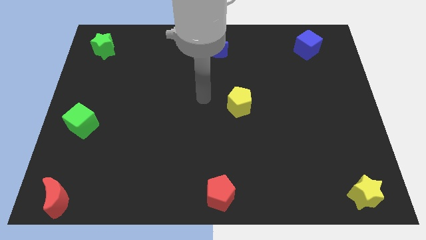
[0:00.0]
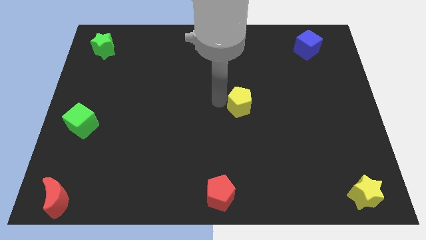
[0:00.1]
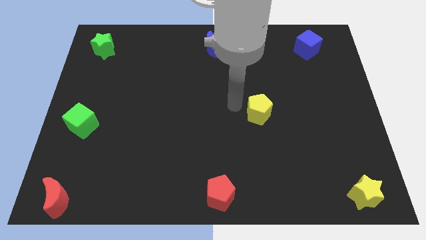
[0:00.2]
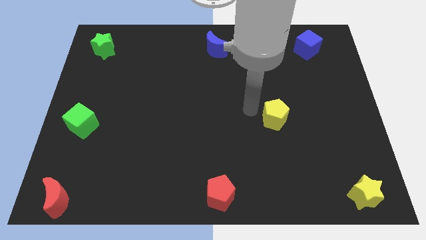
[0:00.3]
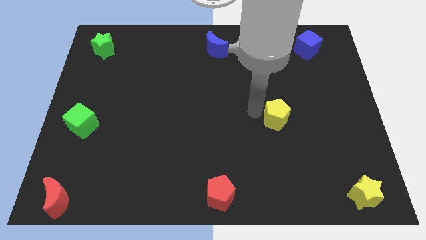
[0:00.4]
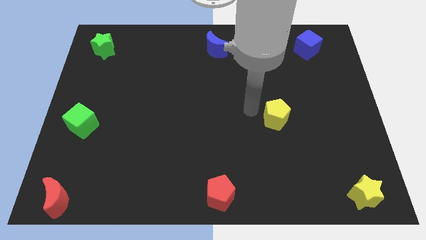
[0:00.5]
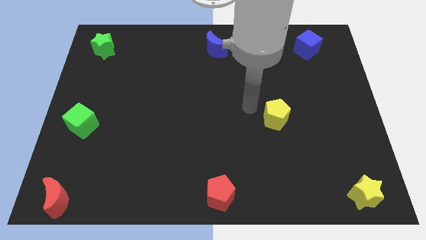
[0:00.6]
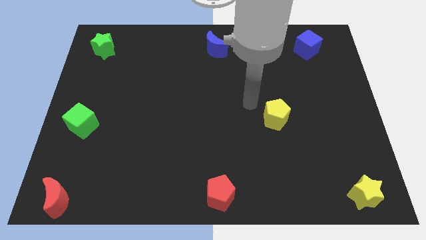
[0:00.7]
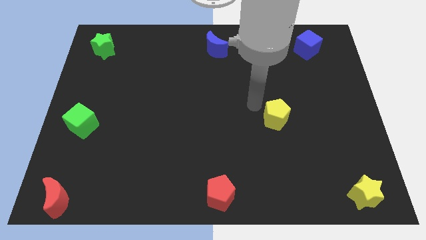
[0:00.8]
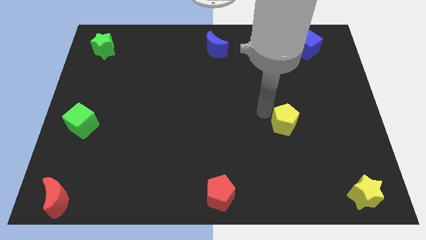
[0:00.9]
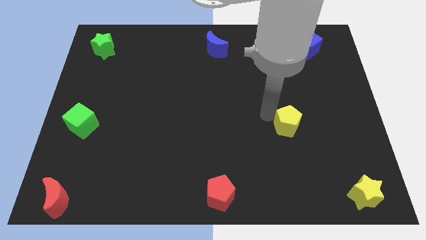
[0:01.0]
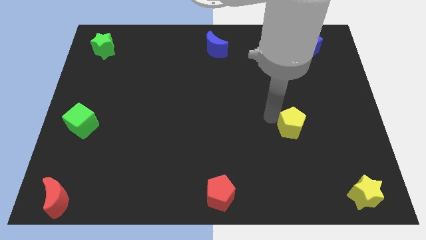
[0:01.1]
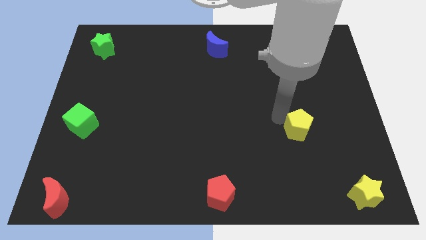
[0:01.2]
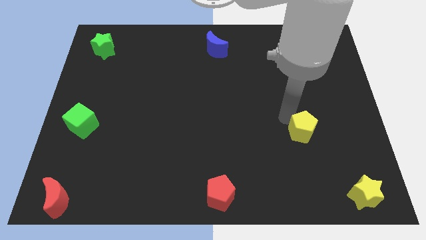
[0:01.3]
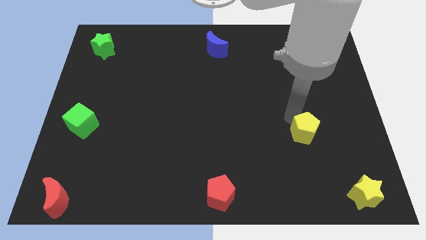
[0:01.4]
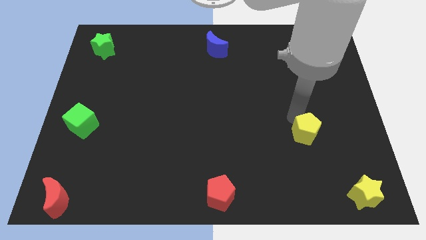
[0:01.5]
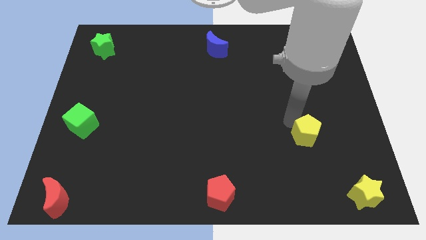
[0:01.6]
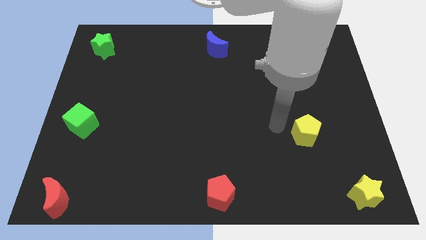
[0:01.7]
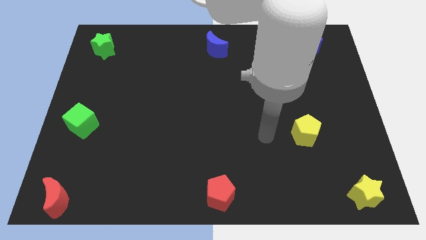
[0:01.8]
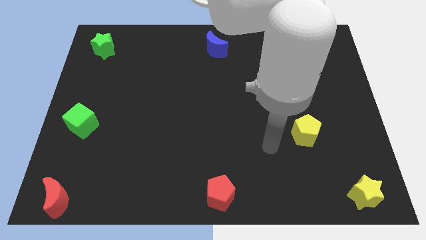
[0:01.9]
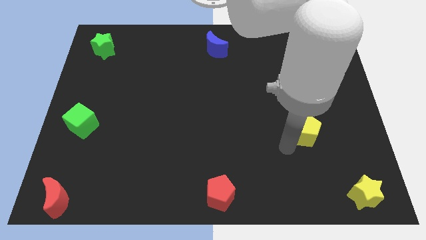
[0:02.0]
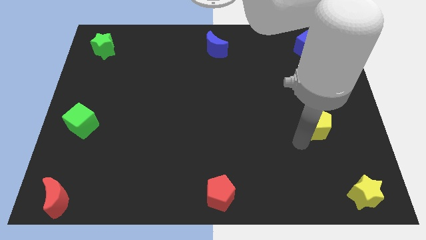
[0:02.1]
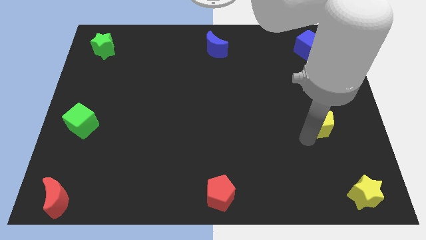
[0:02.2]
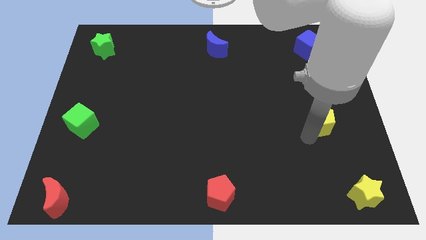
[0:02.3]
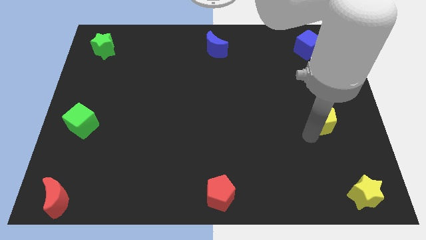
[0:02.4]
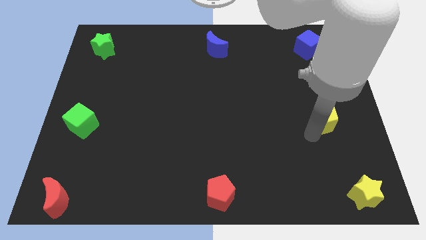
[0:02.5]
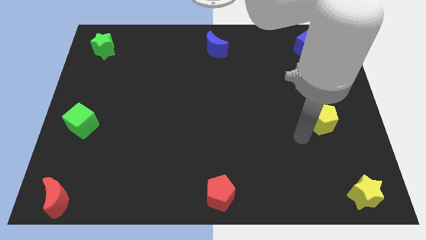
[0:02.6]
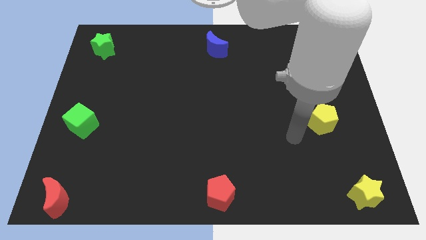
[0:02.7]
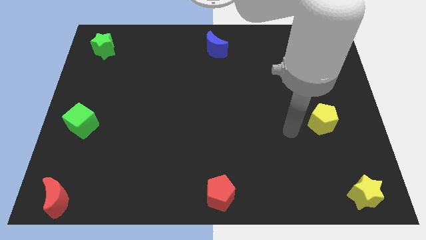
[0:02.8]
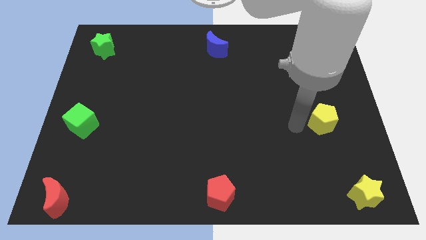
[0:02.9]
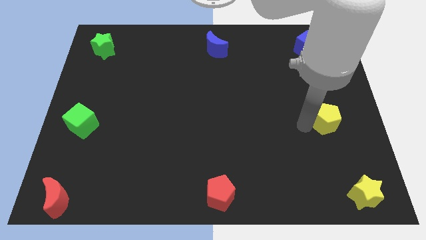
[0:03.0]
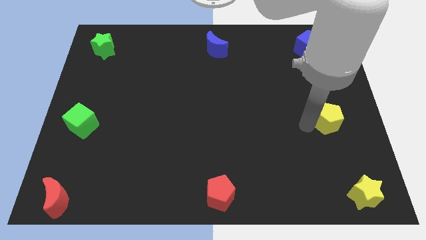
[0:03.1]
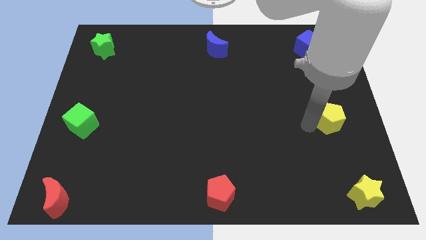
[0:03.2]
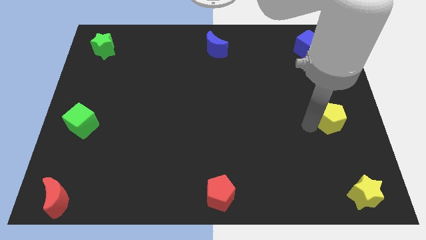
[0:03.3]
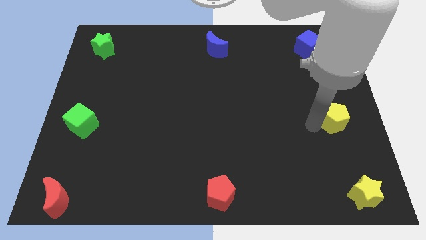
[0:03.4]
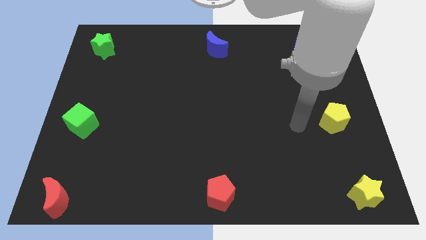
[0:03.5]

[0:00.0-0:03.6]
place the yellow pentagon in the middle right

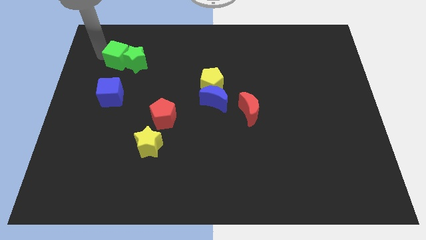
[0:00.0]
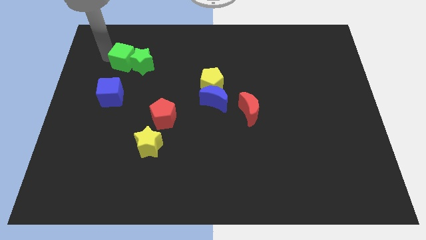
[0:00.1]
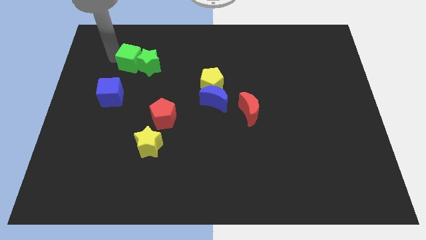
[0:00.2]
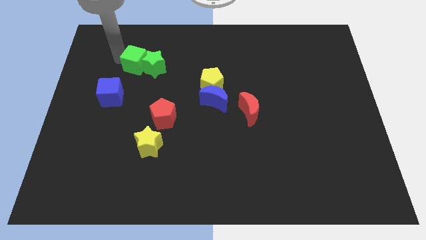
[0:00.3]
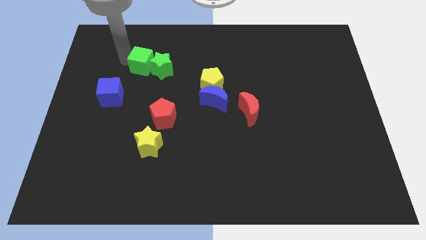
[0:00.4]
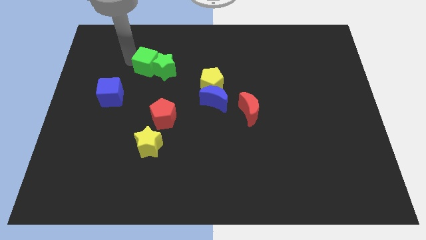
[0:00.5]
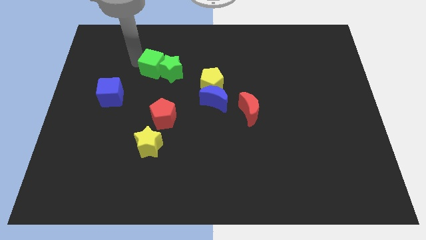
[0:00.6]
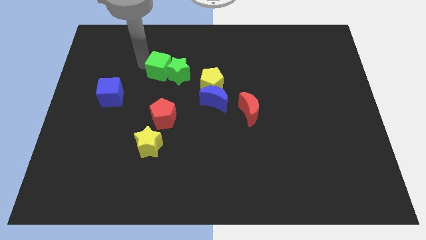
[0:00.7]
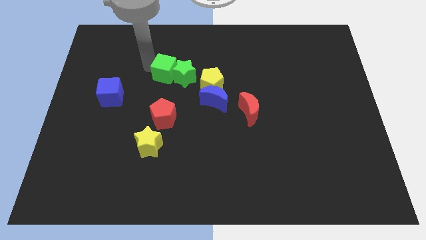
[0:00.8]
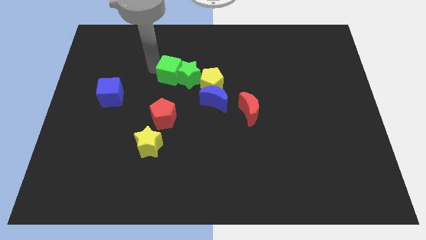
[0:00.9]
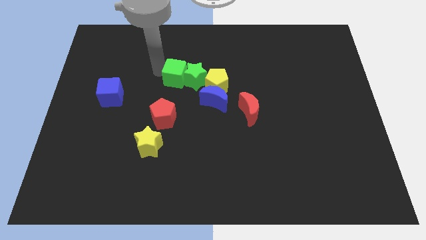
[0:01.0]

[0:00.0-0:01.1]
move the green blocks into the yellow pentagon

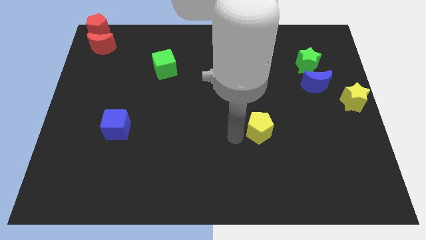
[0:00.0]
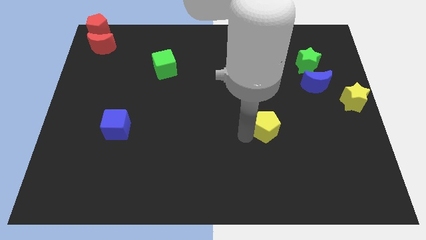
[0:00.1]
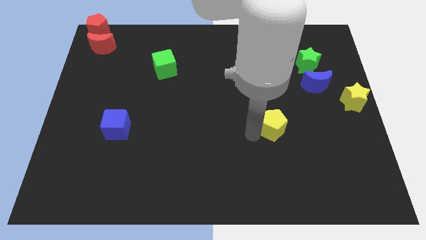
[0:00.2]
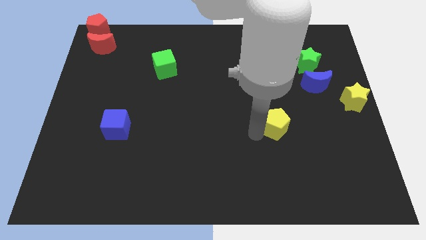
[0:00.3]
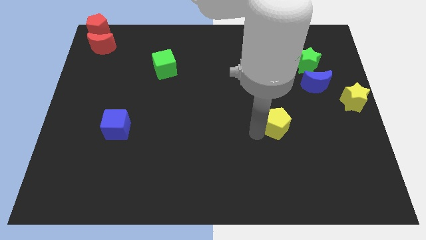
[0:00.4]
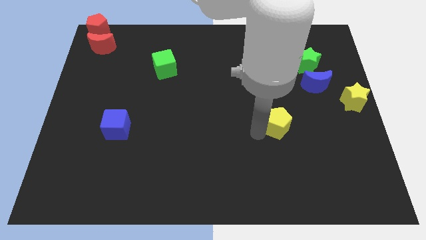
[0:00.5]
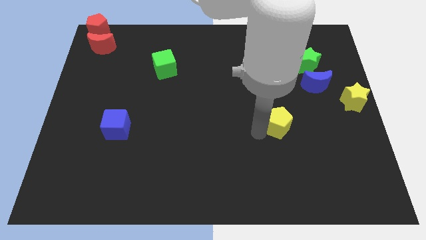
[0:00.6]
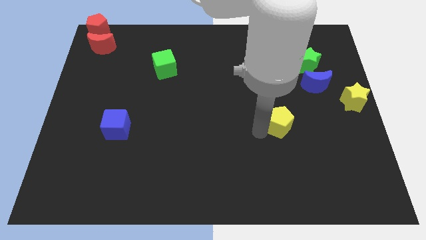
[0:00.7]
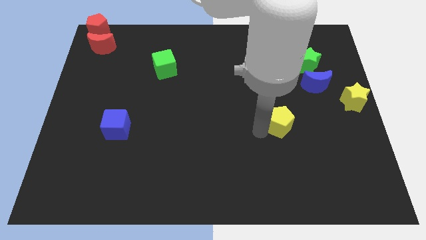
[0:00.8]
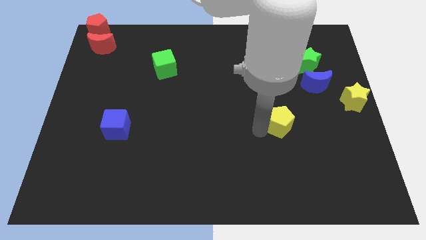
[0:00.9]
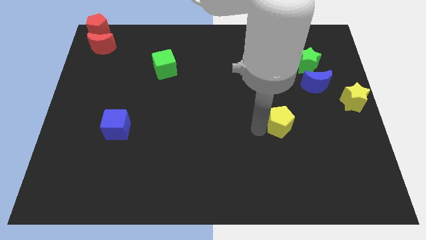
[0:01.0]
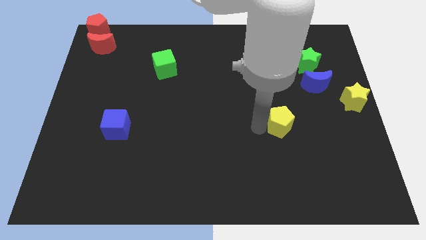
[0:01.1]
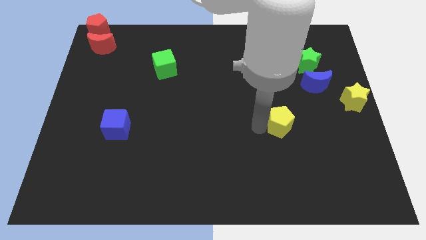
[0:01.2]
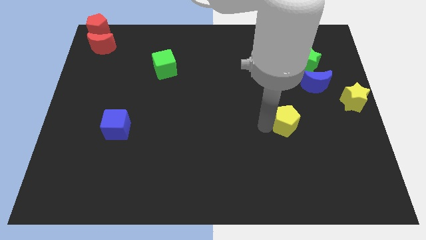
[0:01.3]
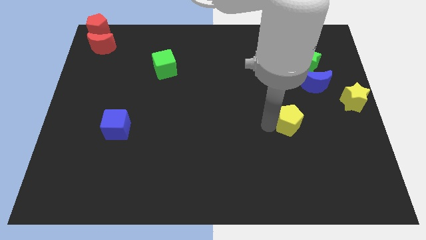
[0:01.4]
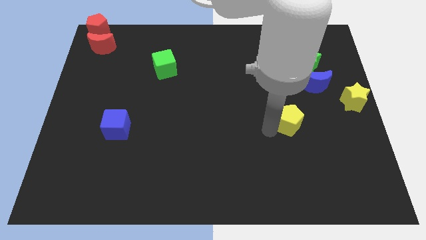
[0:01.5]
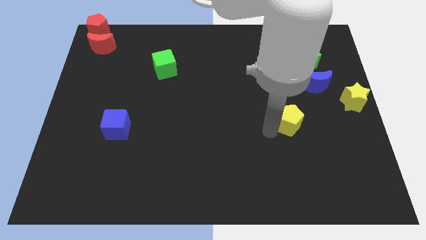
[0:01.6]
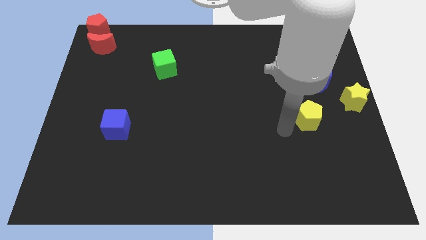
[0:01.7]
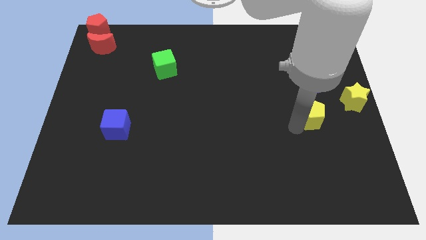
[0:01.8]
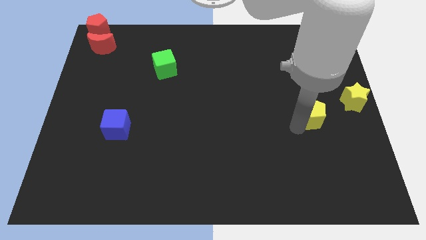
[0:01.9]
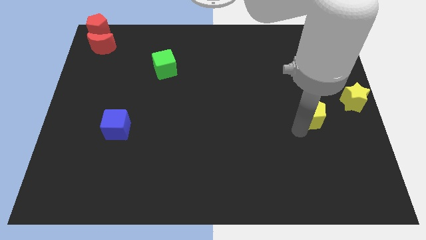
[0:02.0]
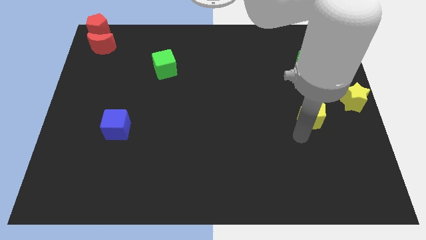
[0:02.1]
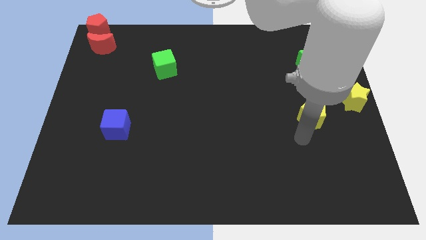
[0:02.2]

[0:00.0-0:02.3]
slide the yellow pentagon towards the yellow star

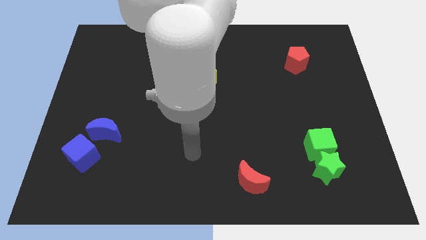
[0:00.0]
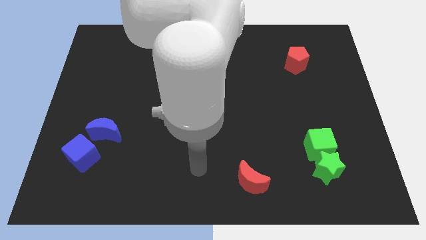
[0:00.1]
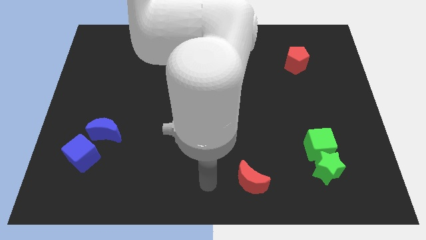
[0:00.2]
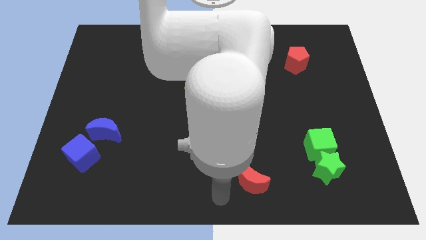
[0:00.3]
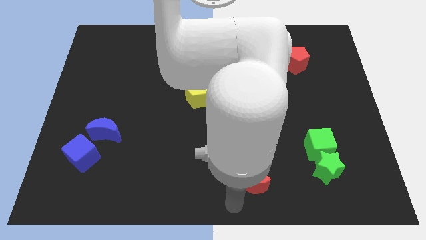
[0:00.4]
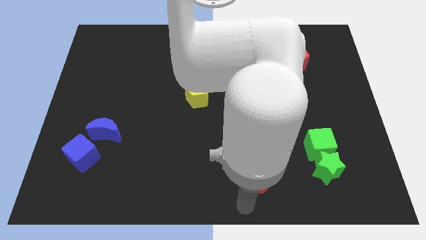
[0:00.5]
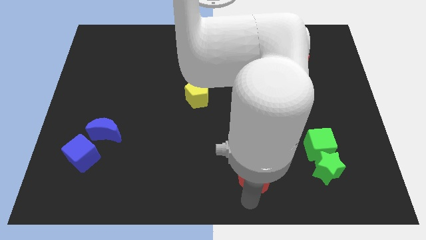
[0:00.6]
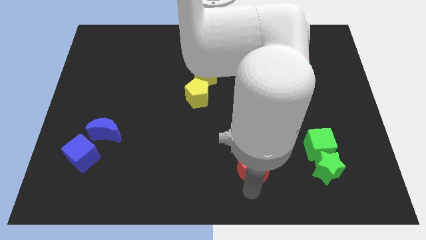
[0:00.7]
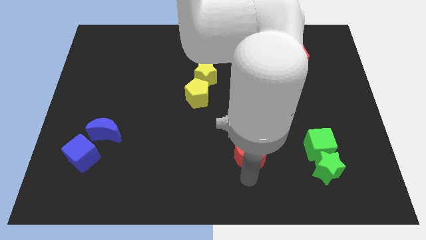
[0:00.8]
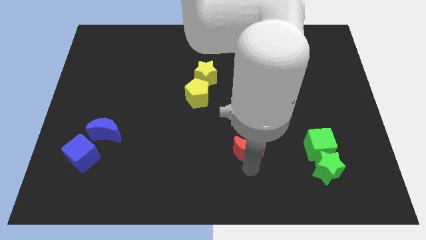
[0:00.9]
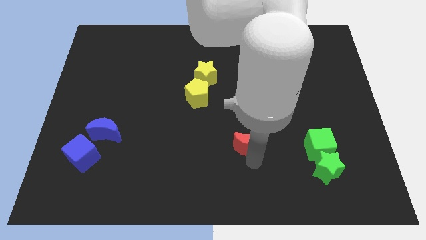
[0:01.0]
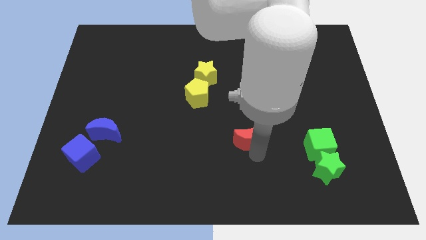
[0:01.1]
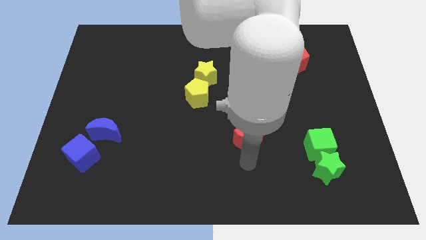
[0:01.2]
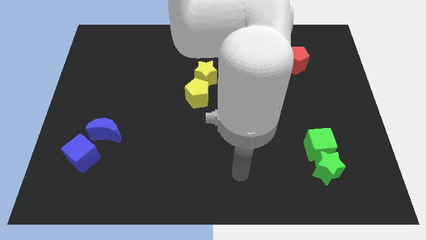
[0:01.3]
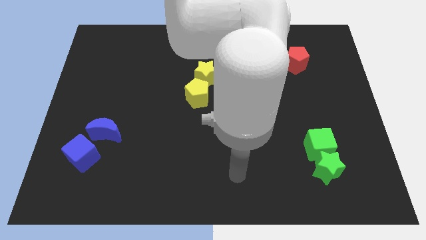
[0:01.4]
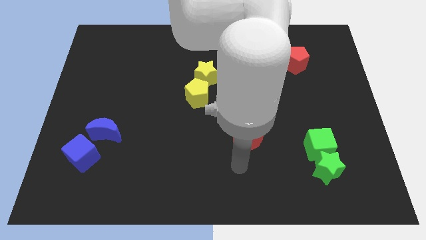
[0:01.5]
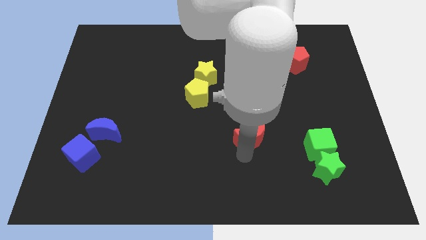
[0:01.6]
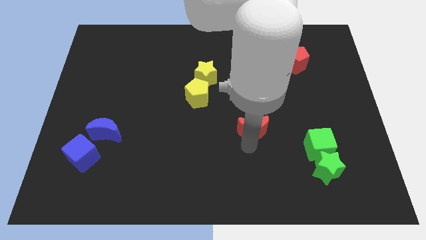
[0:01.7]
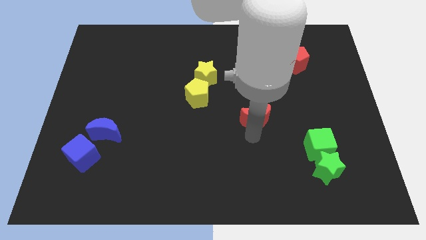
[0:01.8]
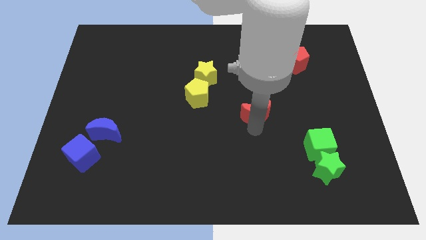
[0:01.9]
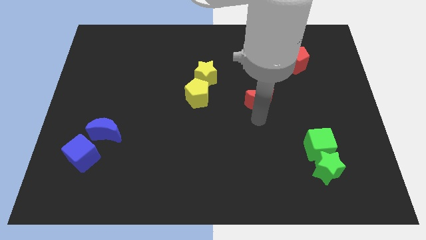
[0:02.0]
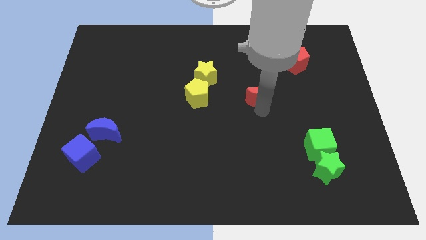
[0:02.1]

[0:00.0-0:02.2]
place red moon to the right of yellow pentagon
